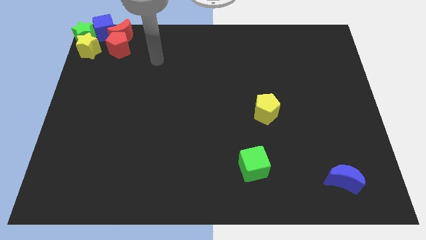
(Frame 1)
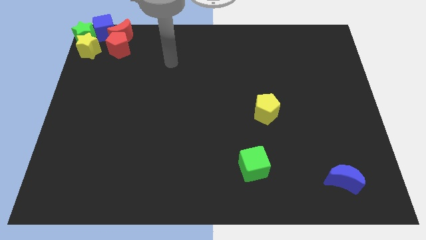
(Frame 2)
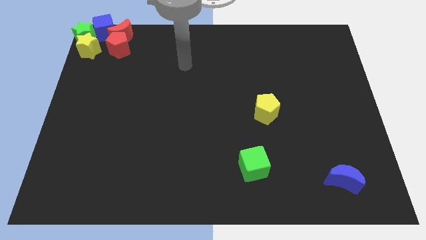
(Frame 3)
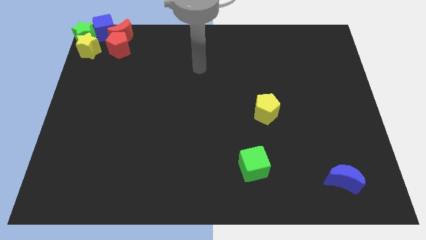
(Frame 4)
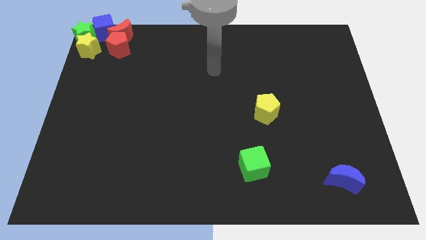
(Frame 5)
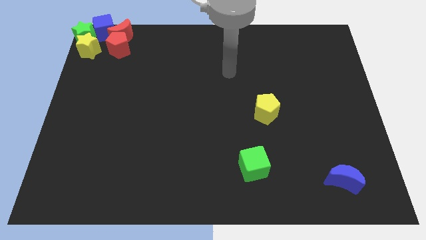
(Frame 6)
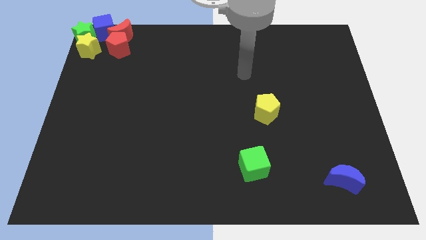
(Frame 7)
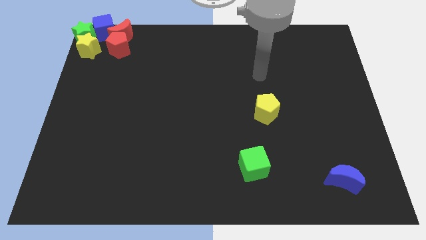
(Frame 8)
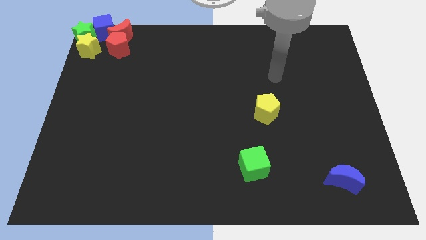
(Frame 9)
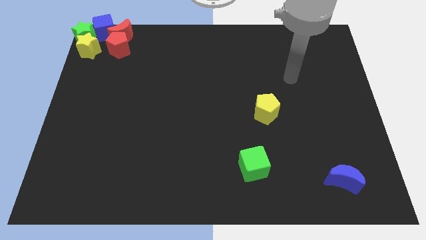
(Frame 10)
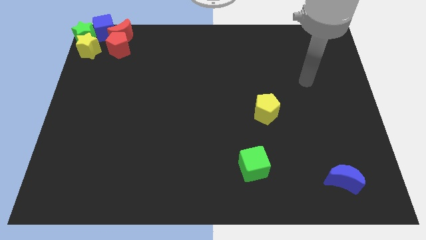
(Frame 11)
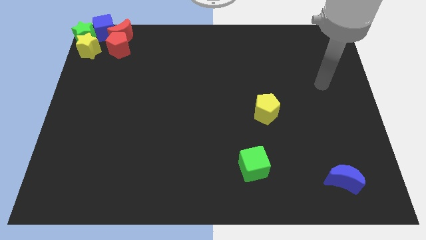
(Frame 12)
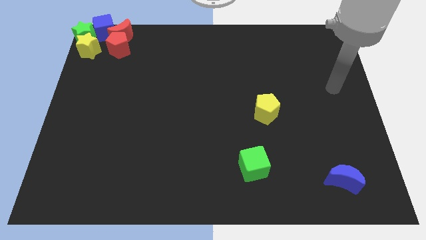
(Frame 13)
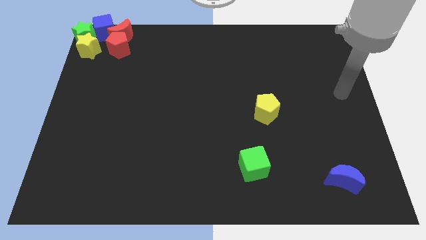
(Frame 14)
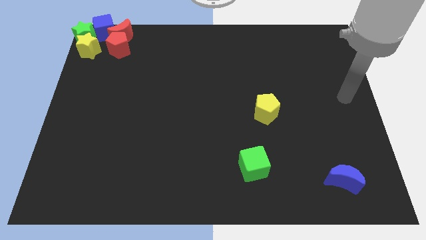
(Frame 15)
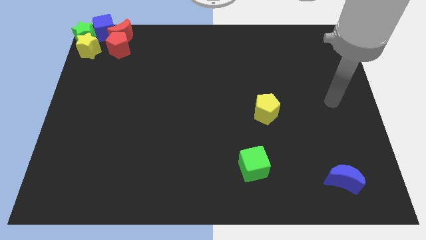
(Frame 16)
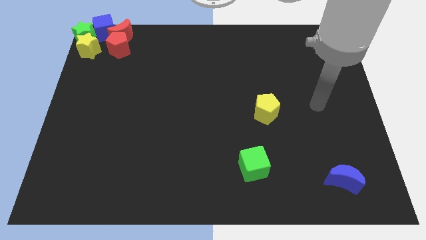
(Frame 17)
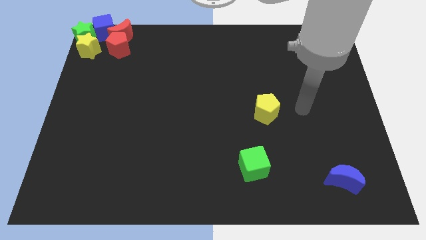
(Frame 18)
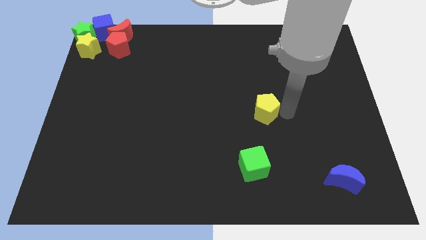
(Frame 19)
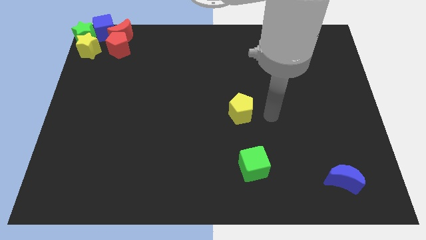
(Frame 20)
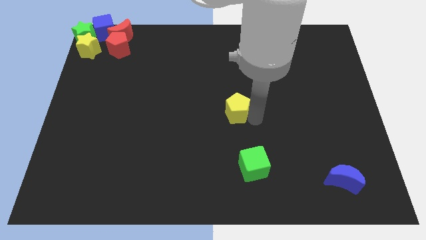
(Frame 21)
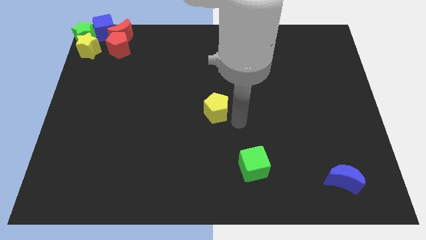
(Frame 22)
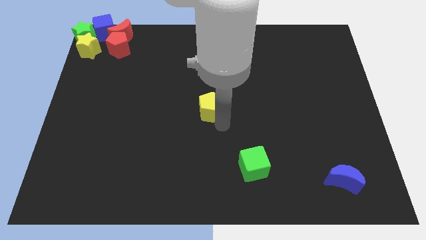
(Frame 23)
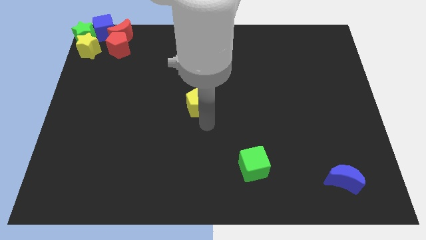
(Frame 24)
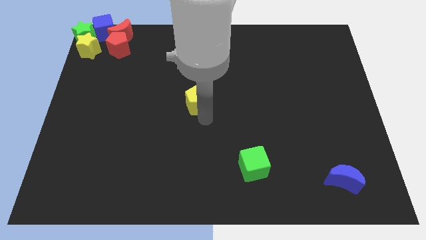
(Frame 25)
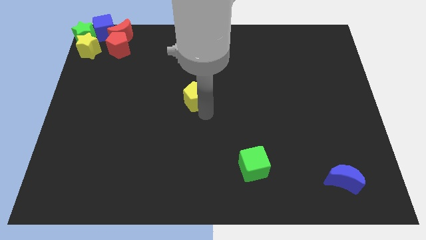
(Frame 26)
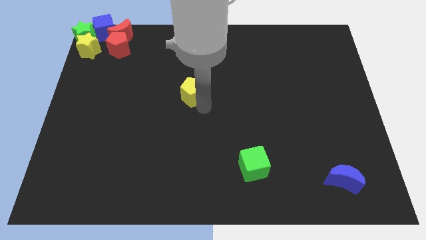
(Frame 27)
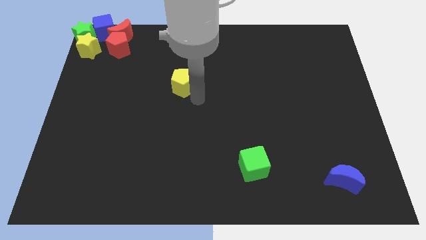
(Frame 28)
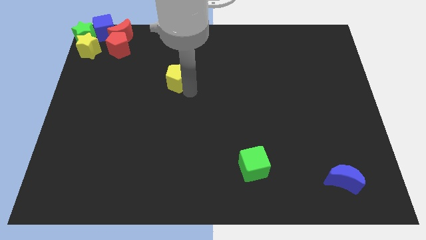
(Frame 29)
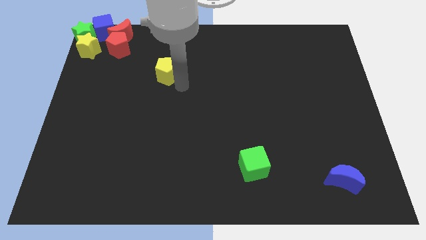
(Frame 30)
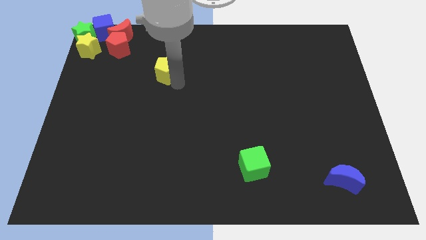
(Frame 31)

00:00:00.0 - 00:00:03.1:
move the yellow pentagon towards the group of blocks

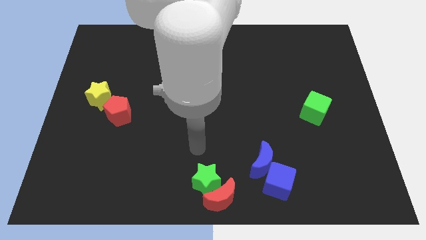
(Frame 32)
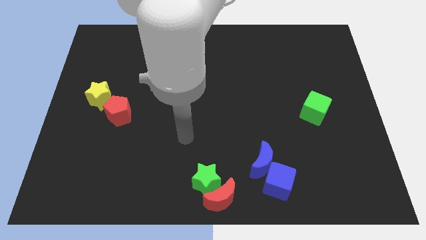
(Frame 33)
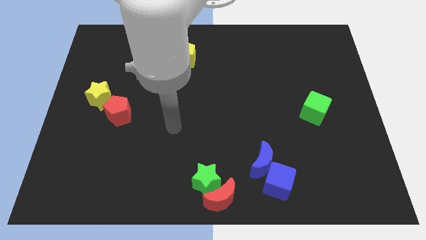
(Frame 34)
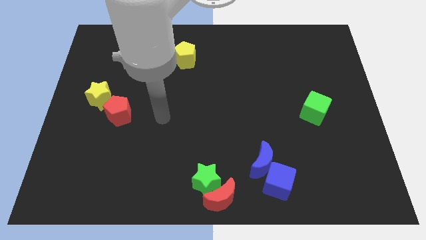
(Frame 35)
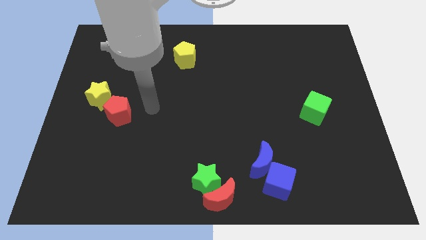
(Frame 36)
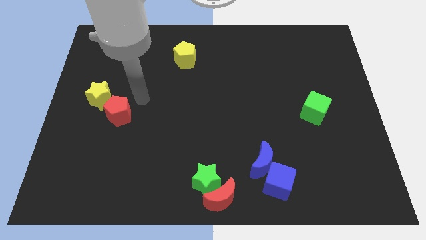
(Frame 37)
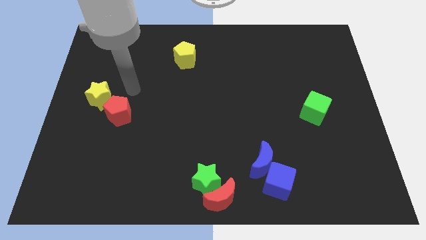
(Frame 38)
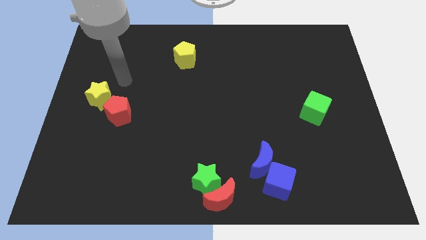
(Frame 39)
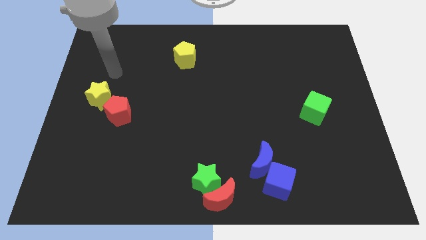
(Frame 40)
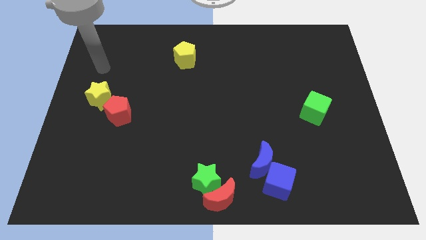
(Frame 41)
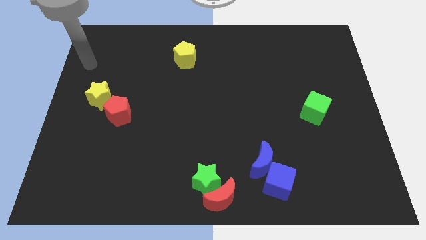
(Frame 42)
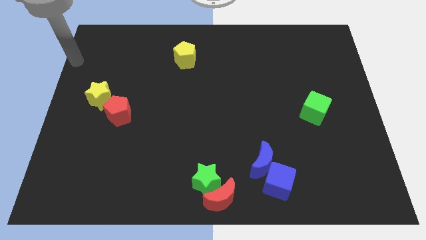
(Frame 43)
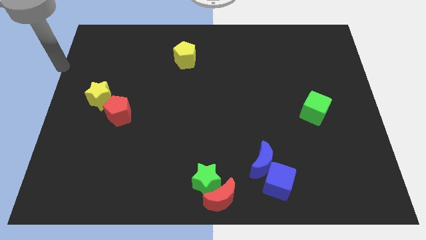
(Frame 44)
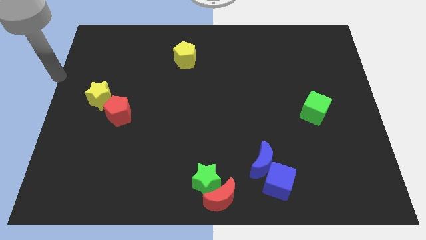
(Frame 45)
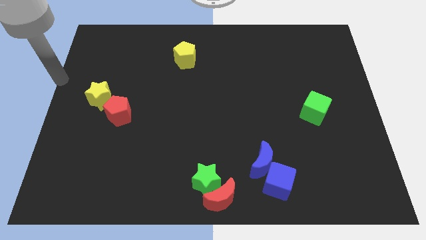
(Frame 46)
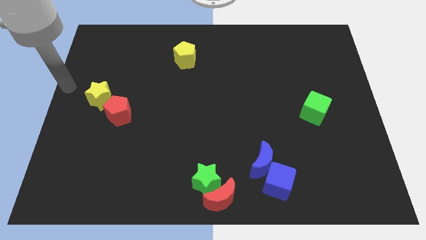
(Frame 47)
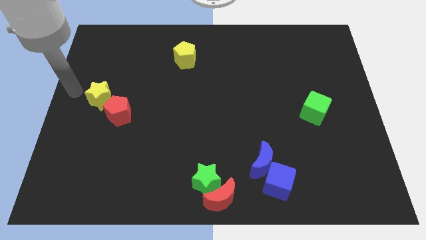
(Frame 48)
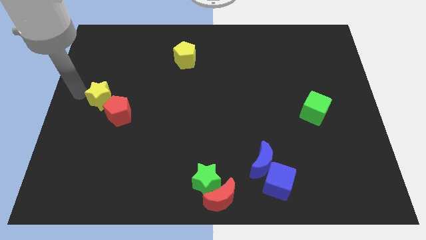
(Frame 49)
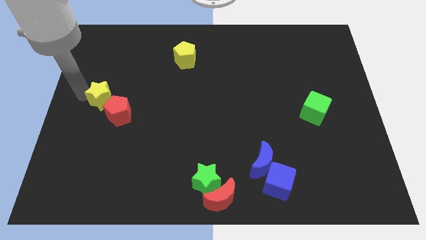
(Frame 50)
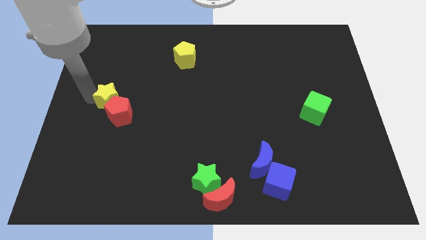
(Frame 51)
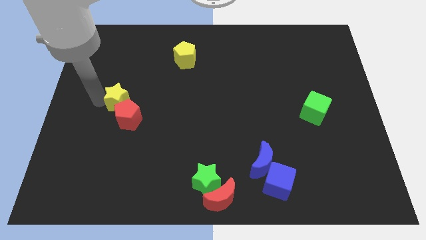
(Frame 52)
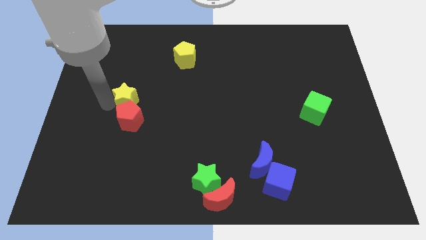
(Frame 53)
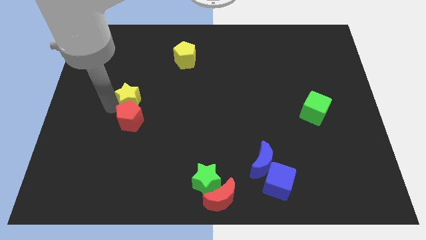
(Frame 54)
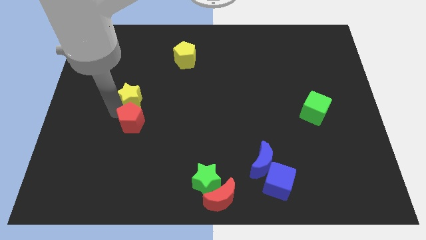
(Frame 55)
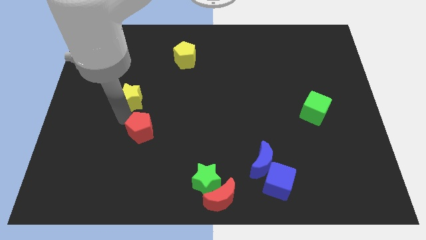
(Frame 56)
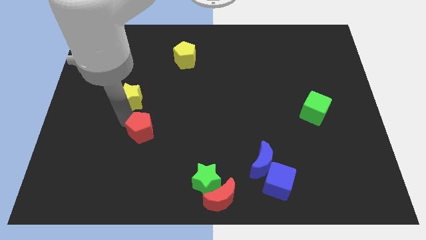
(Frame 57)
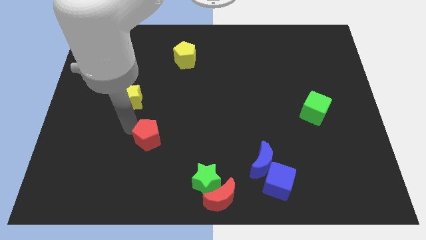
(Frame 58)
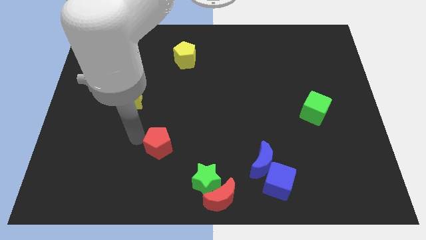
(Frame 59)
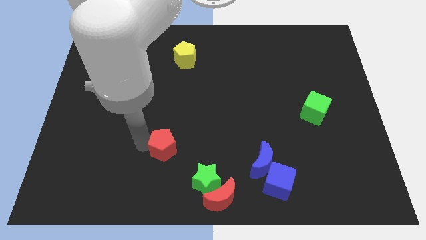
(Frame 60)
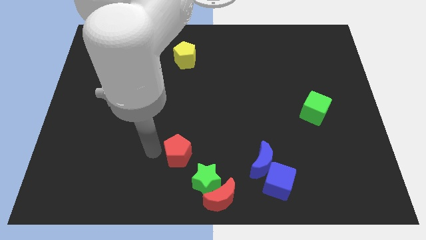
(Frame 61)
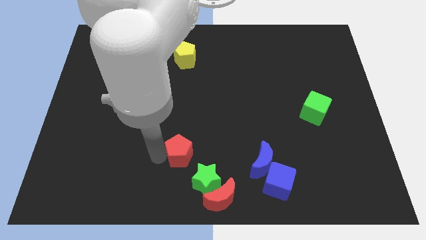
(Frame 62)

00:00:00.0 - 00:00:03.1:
push the red pentagon towards the green star

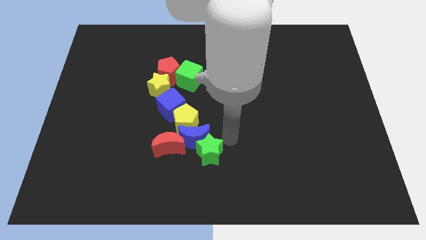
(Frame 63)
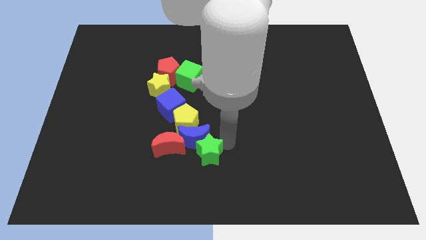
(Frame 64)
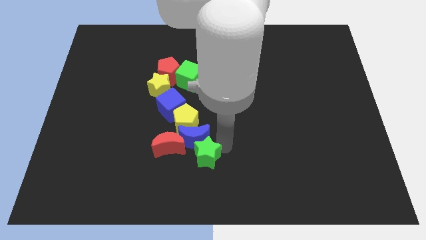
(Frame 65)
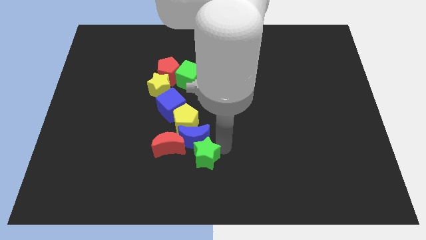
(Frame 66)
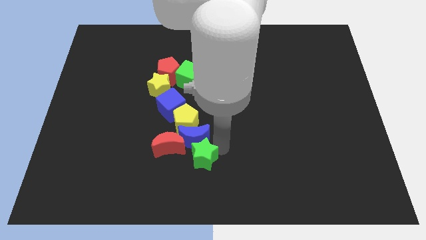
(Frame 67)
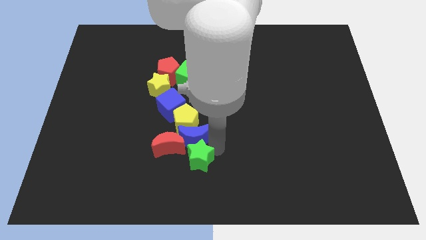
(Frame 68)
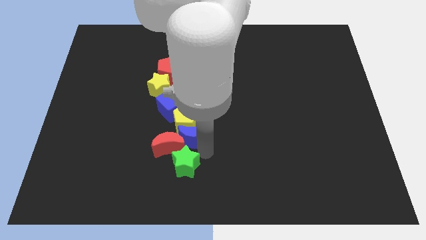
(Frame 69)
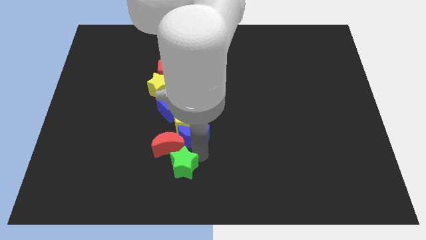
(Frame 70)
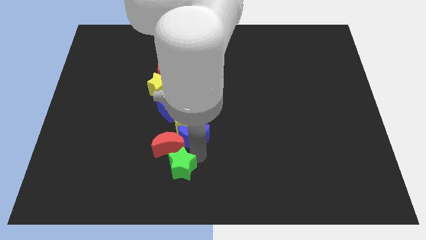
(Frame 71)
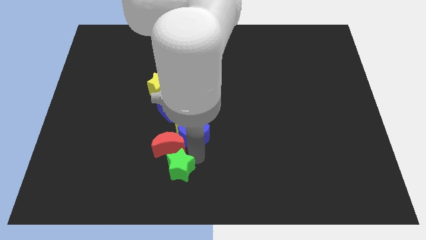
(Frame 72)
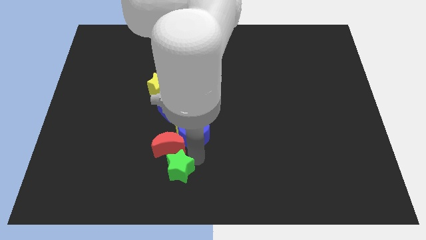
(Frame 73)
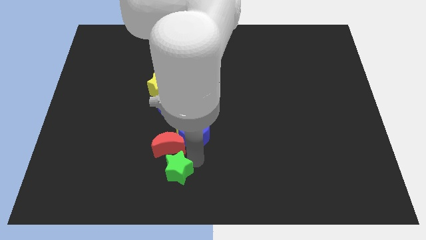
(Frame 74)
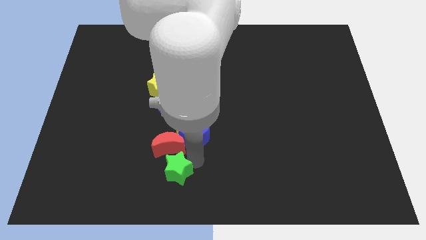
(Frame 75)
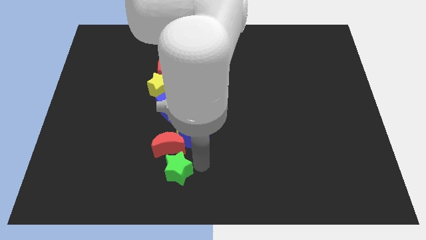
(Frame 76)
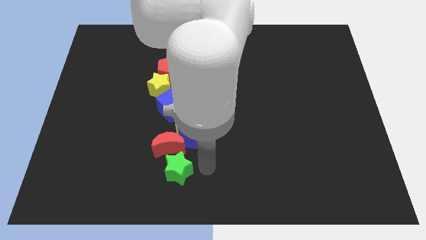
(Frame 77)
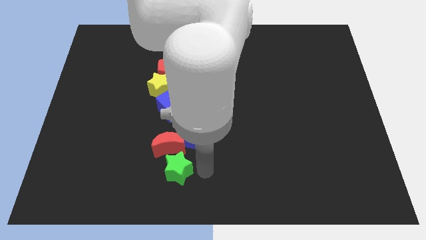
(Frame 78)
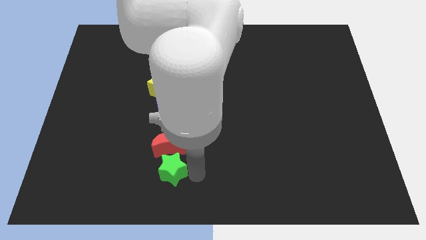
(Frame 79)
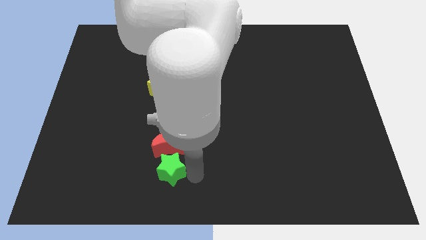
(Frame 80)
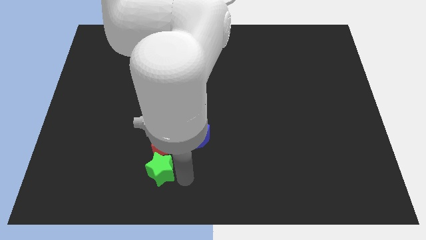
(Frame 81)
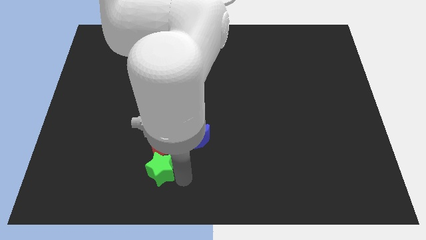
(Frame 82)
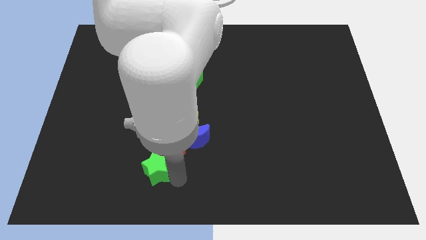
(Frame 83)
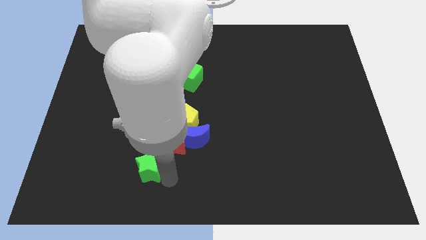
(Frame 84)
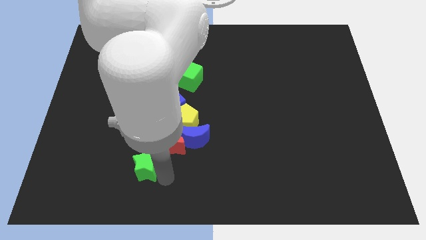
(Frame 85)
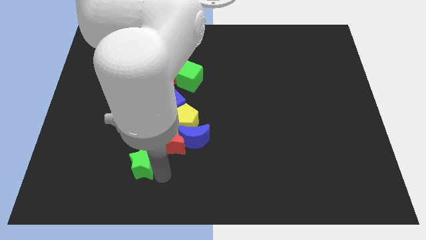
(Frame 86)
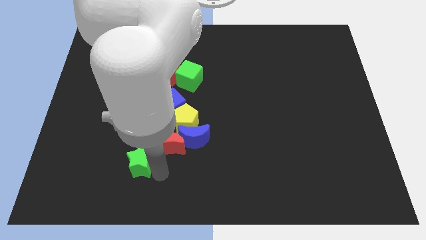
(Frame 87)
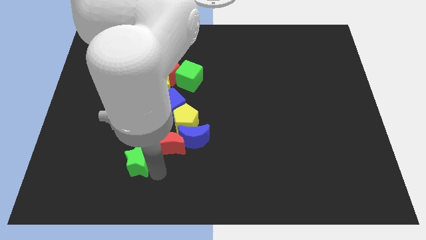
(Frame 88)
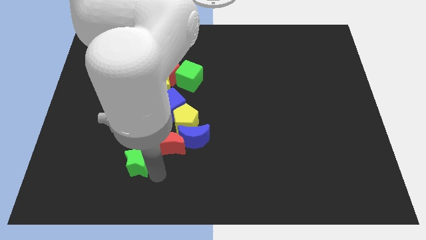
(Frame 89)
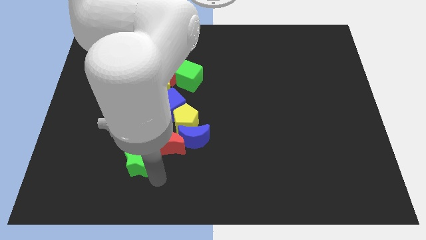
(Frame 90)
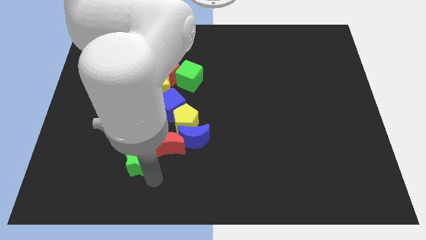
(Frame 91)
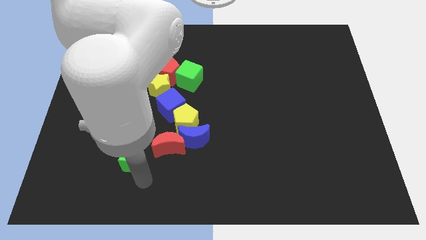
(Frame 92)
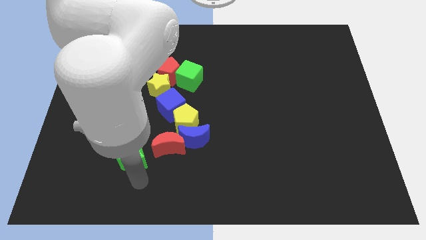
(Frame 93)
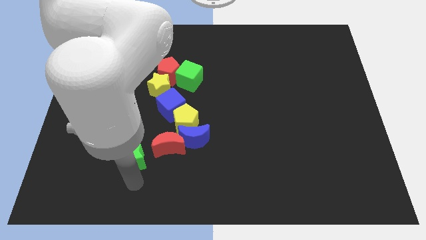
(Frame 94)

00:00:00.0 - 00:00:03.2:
place the green star to the left side of the red moon
